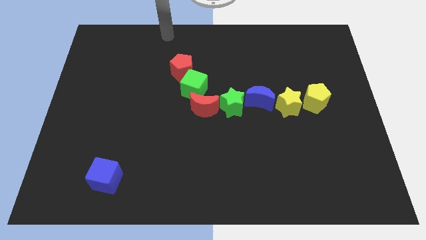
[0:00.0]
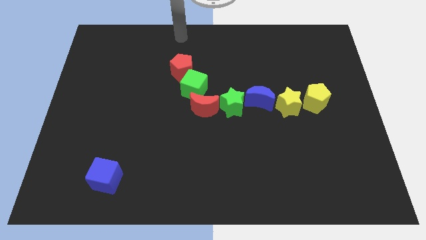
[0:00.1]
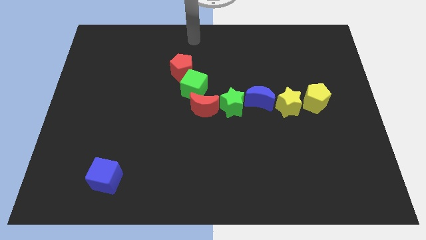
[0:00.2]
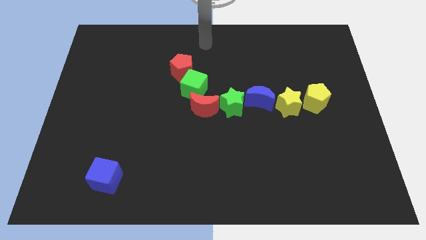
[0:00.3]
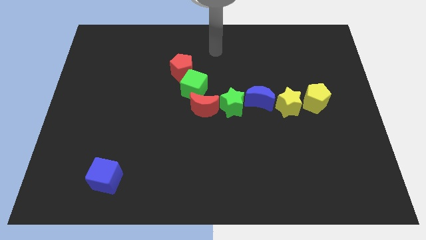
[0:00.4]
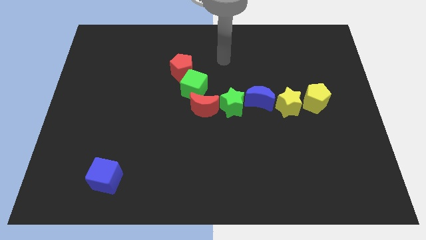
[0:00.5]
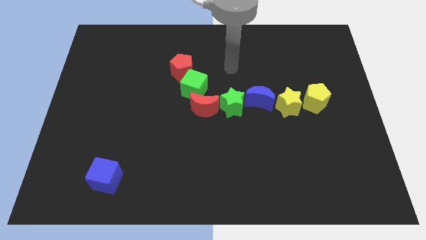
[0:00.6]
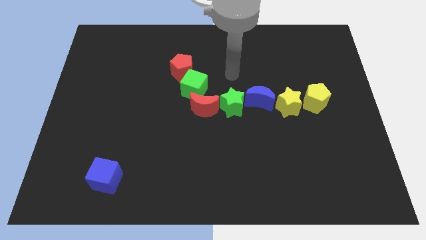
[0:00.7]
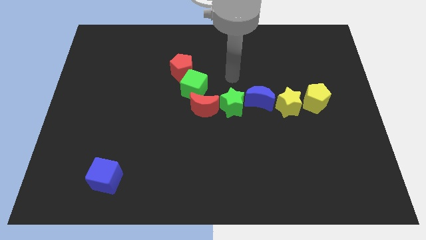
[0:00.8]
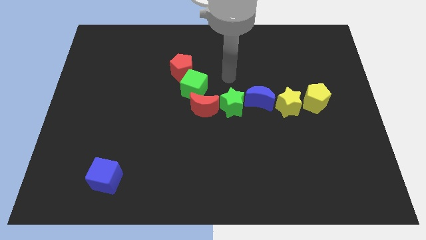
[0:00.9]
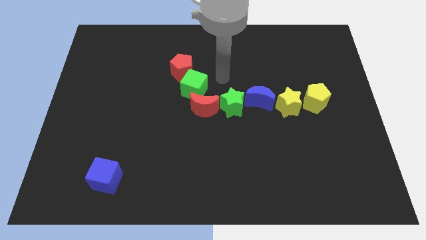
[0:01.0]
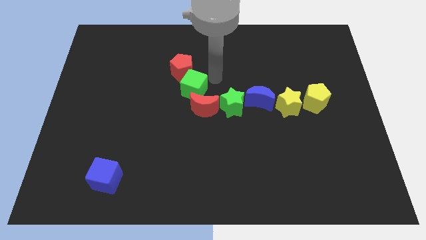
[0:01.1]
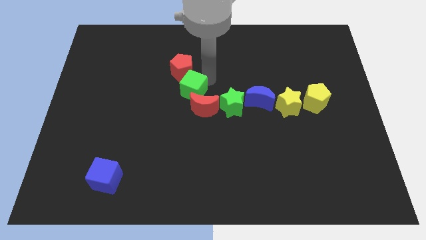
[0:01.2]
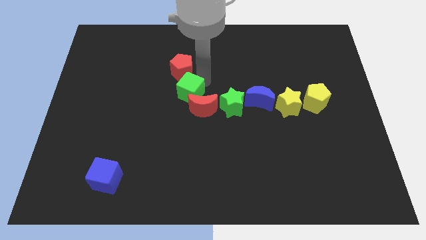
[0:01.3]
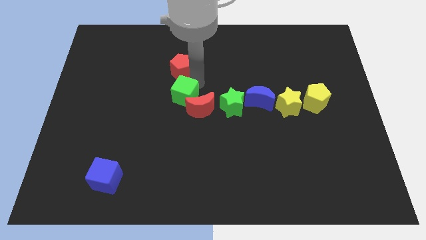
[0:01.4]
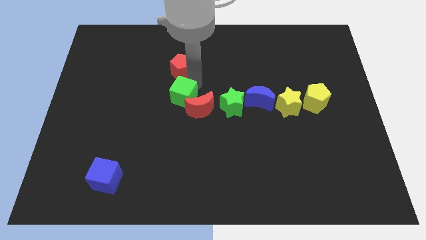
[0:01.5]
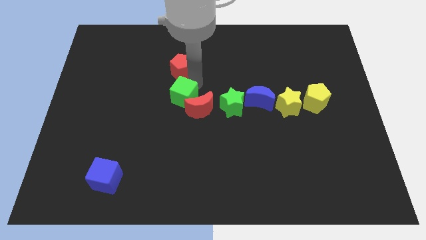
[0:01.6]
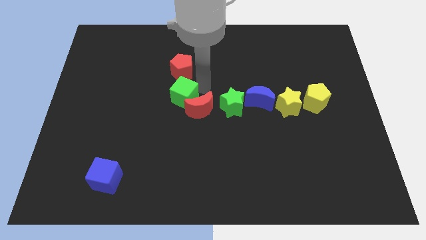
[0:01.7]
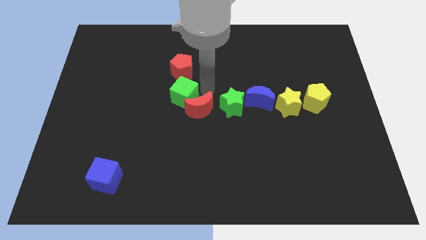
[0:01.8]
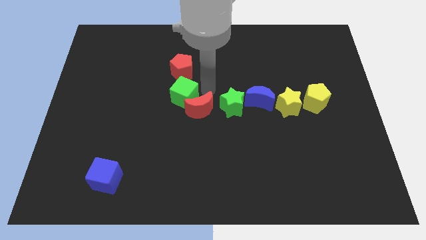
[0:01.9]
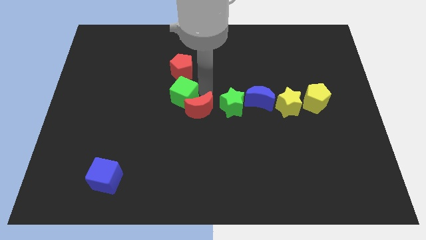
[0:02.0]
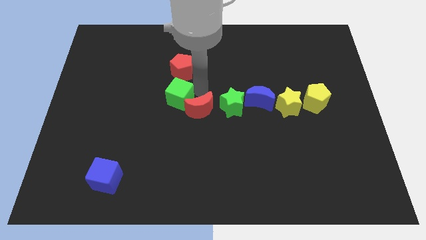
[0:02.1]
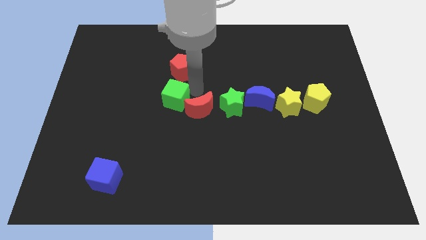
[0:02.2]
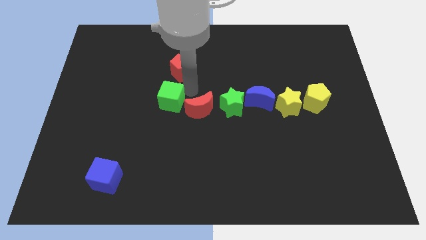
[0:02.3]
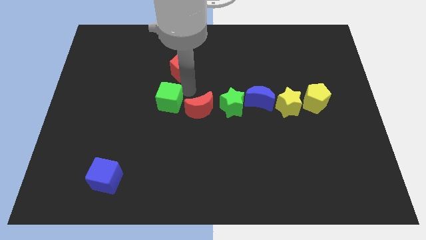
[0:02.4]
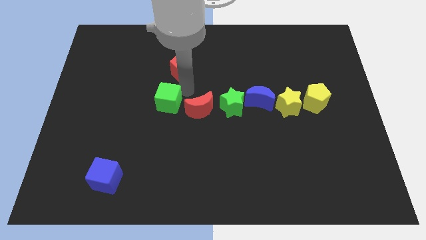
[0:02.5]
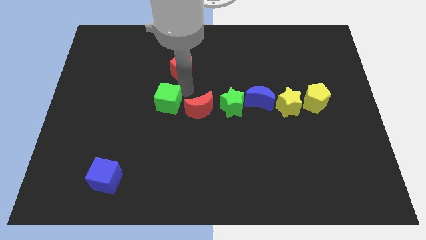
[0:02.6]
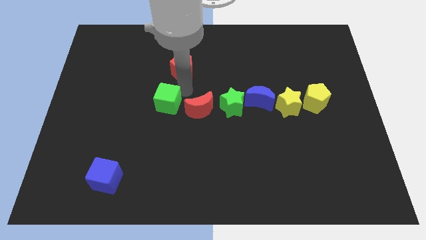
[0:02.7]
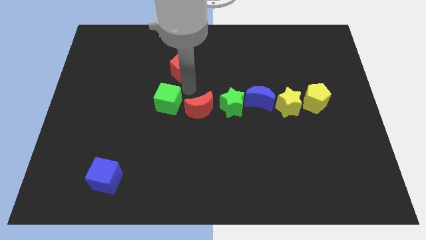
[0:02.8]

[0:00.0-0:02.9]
push green cube beside red crescent

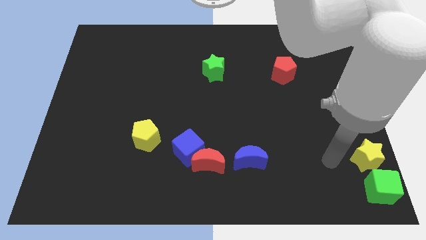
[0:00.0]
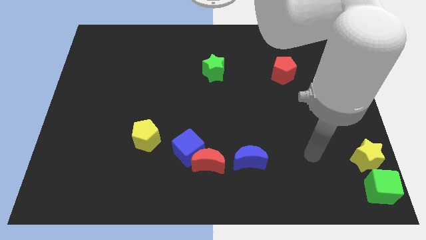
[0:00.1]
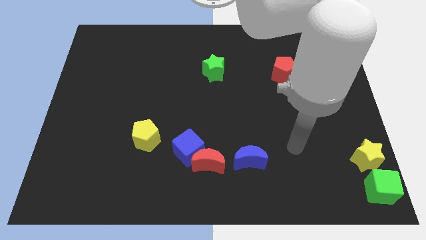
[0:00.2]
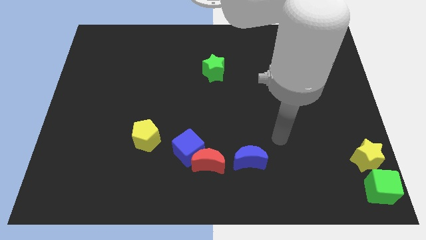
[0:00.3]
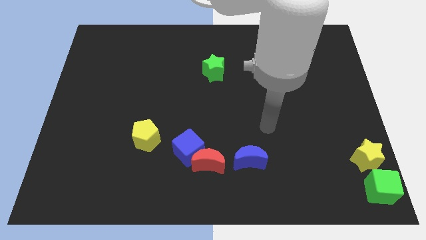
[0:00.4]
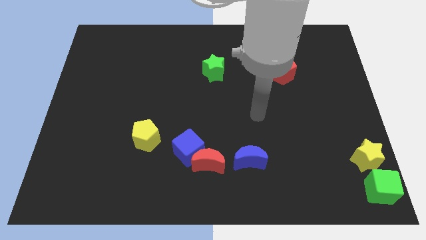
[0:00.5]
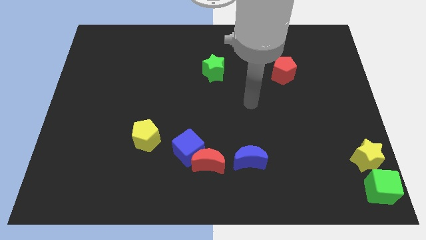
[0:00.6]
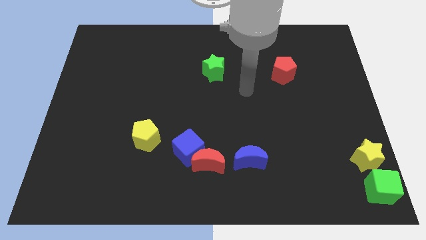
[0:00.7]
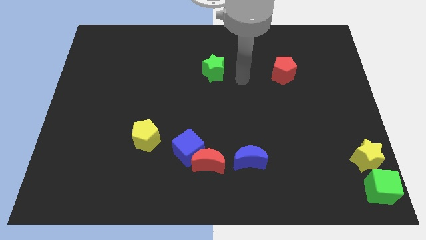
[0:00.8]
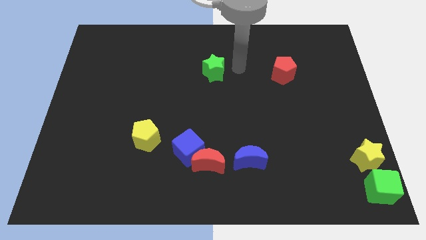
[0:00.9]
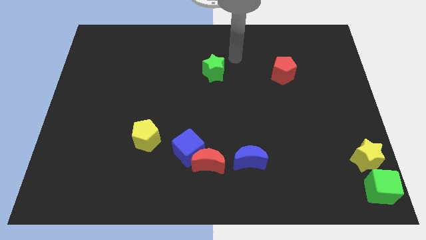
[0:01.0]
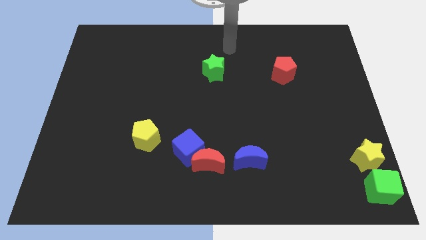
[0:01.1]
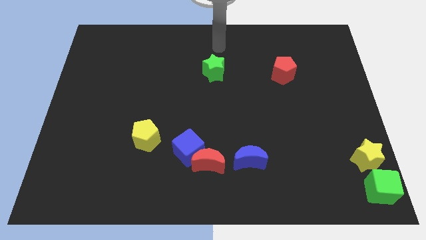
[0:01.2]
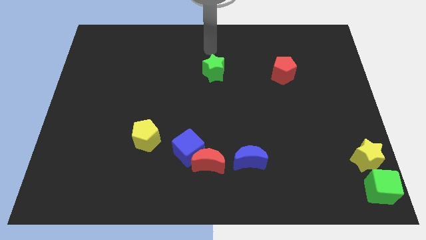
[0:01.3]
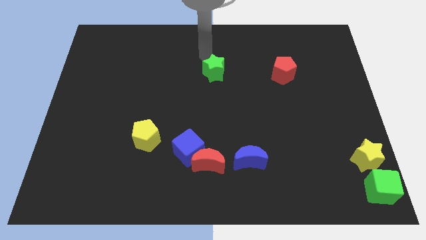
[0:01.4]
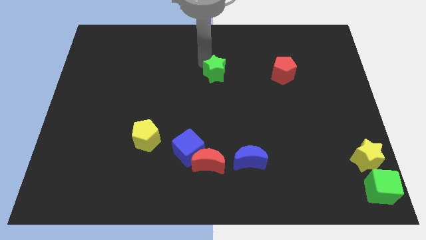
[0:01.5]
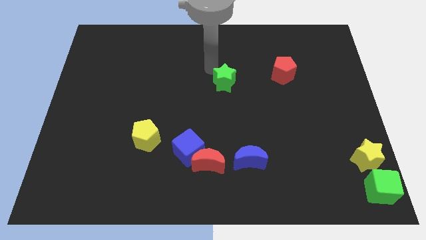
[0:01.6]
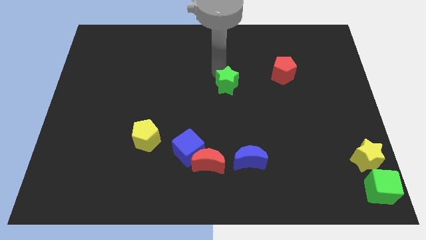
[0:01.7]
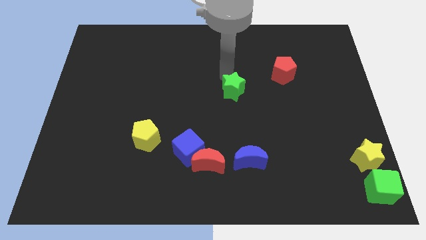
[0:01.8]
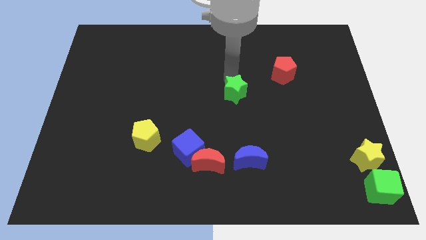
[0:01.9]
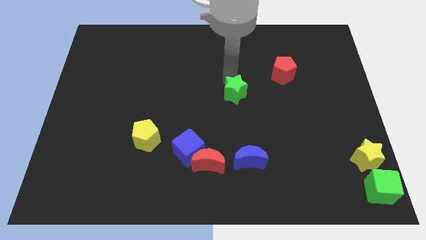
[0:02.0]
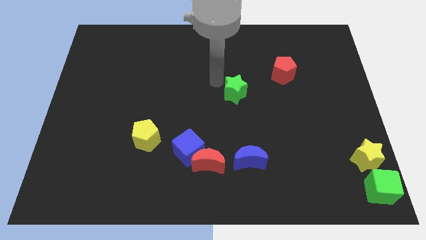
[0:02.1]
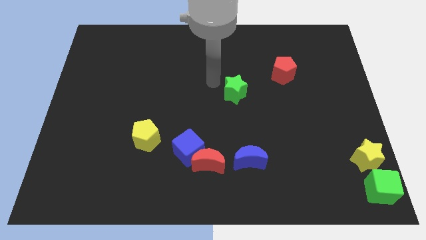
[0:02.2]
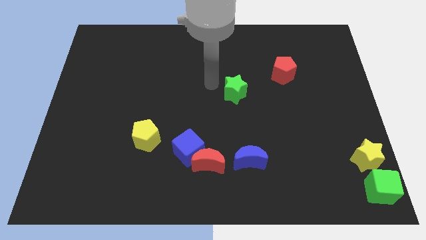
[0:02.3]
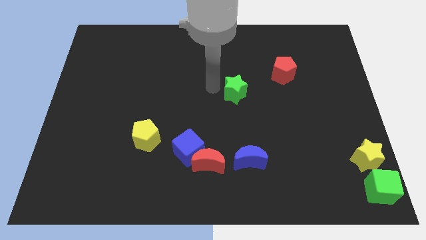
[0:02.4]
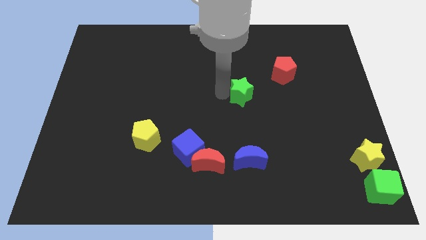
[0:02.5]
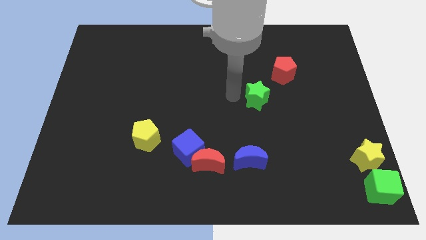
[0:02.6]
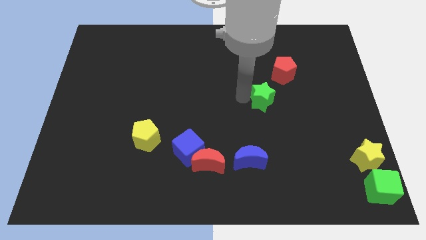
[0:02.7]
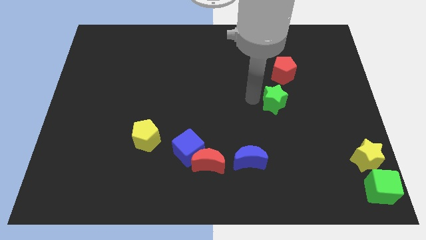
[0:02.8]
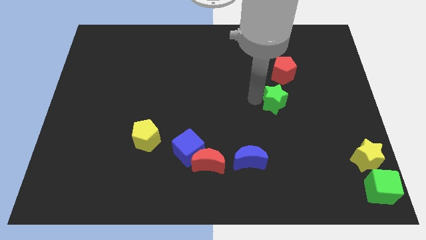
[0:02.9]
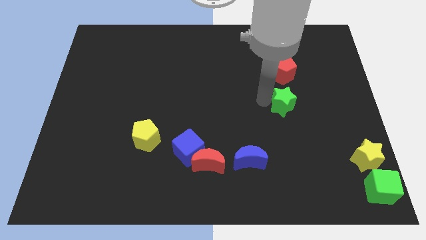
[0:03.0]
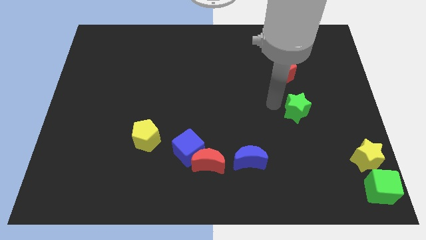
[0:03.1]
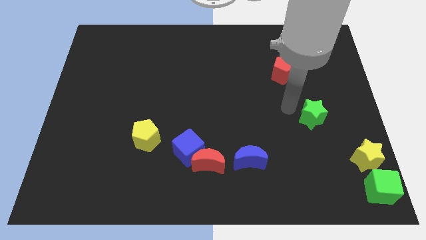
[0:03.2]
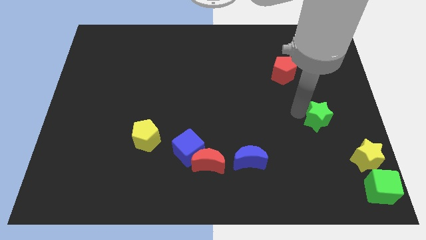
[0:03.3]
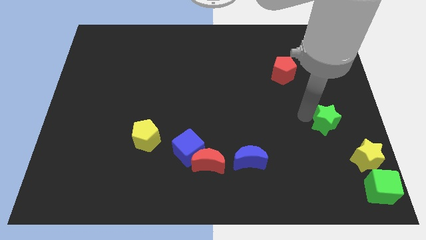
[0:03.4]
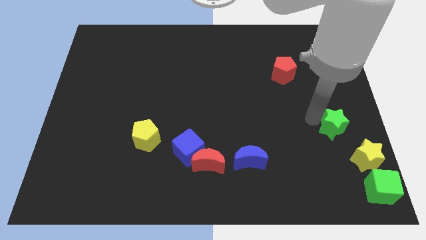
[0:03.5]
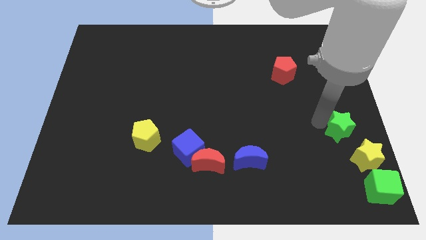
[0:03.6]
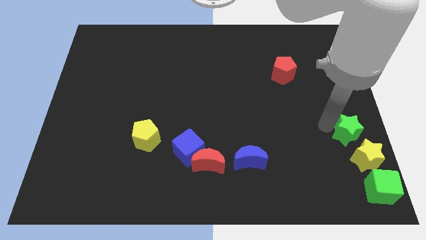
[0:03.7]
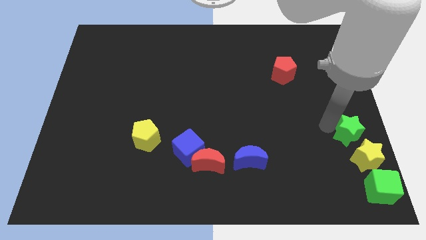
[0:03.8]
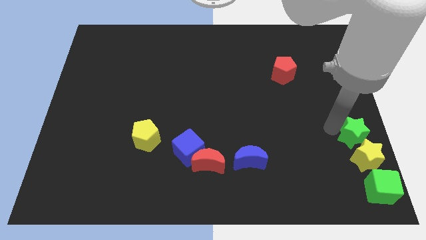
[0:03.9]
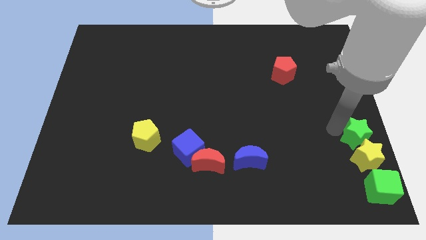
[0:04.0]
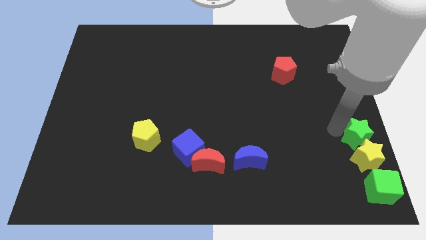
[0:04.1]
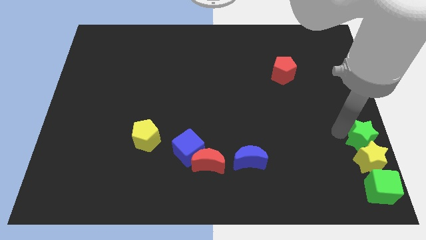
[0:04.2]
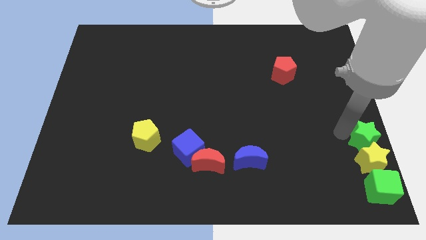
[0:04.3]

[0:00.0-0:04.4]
push the green star into the yellow star

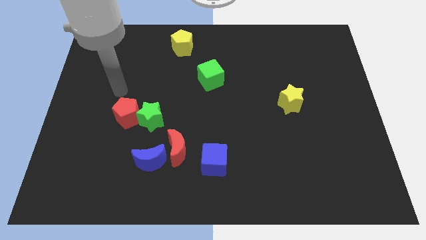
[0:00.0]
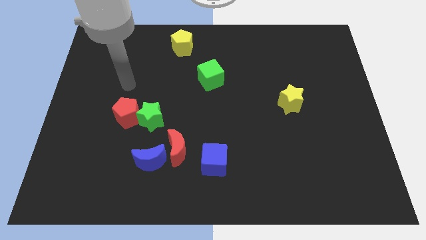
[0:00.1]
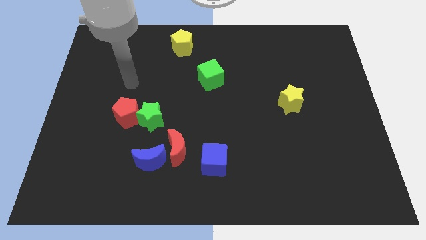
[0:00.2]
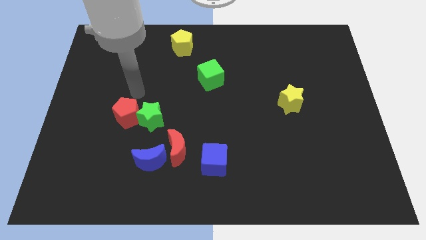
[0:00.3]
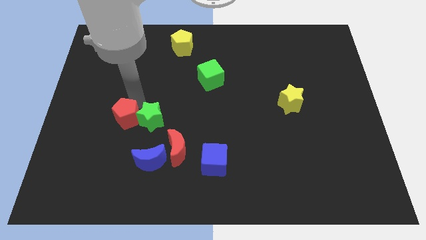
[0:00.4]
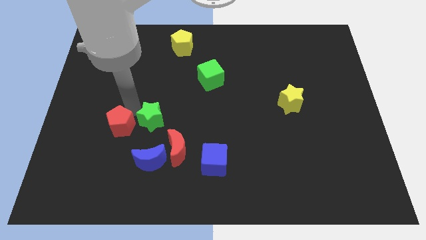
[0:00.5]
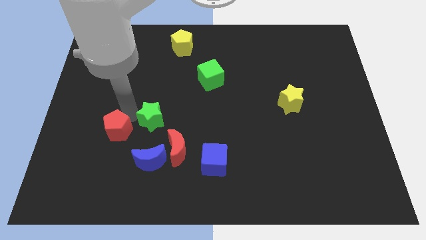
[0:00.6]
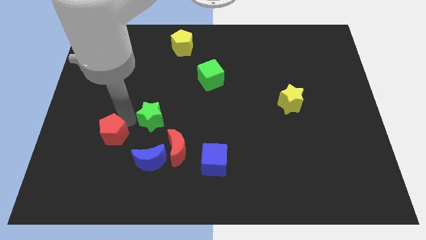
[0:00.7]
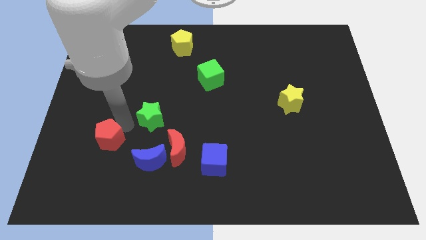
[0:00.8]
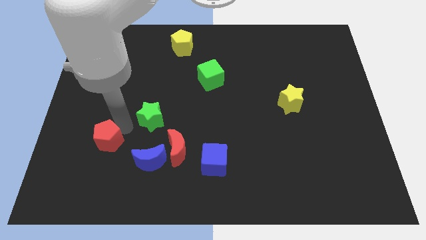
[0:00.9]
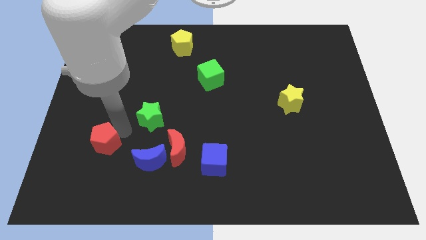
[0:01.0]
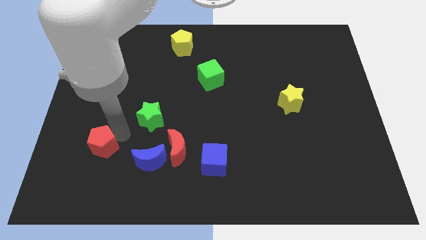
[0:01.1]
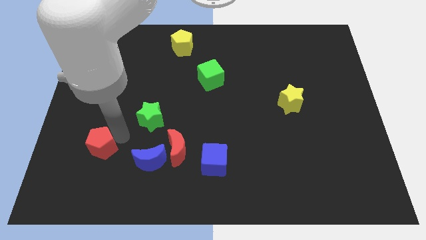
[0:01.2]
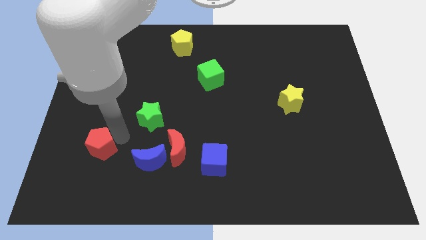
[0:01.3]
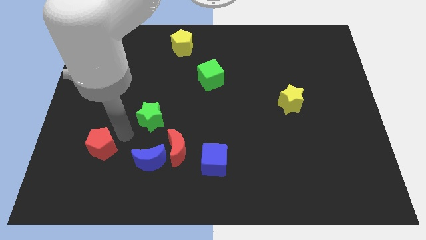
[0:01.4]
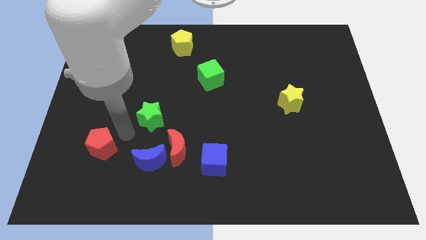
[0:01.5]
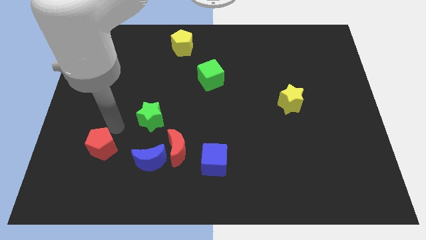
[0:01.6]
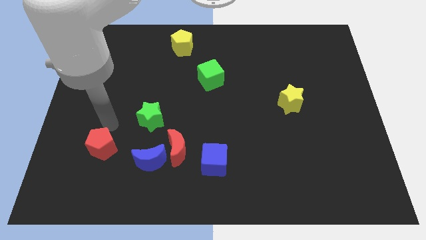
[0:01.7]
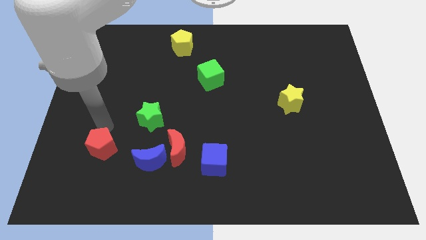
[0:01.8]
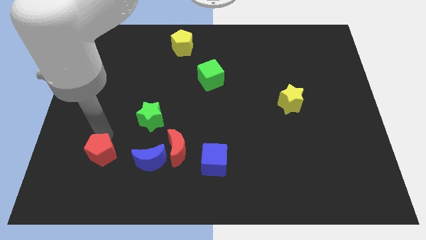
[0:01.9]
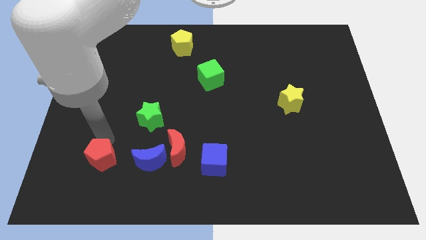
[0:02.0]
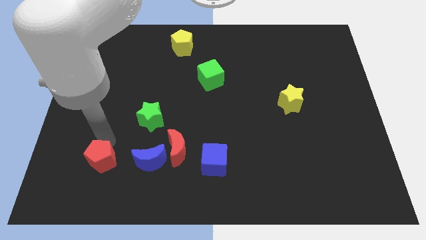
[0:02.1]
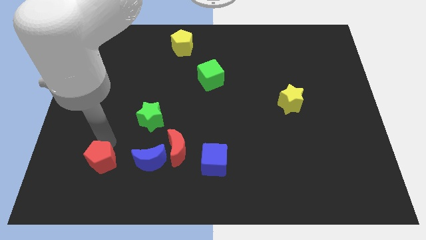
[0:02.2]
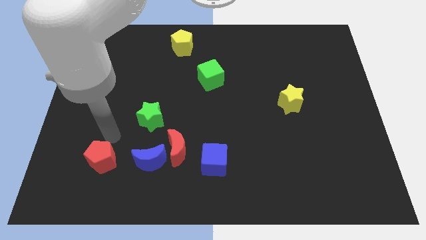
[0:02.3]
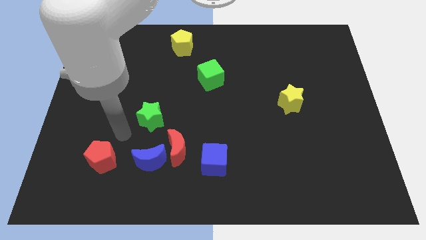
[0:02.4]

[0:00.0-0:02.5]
push red pentagon beside blue crescent
